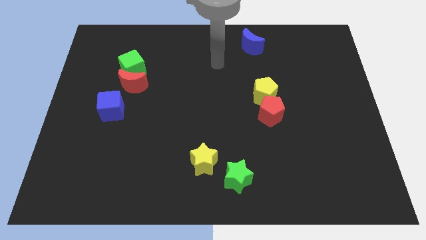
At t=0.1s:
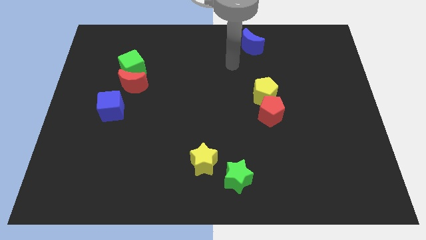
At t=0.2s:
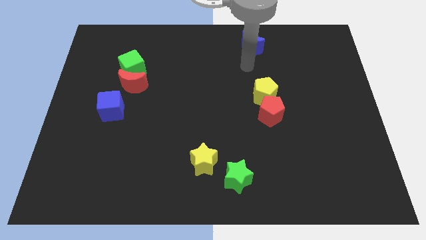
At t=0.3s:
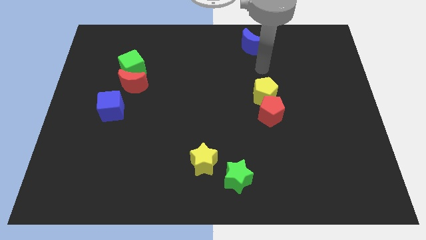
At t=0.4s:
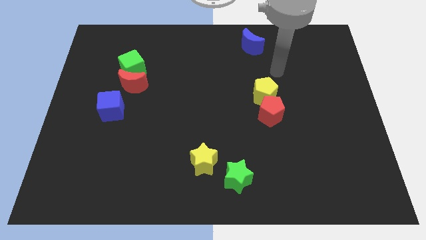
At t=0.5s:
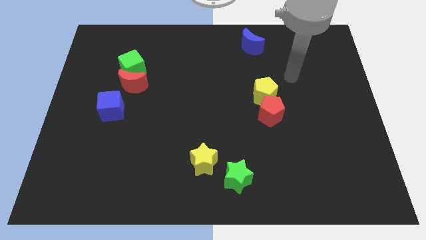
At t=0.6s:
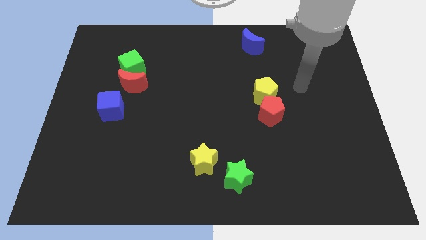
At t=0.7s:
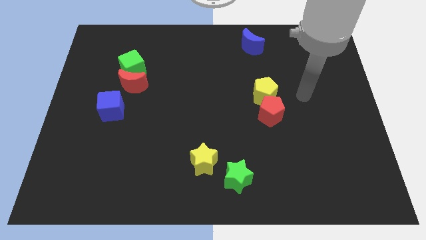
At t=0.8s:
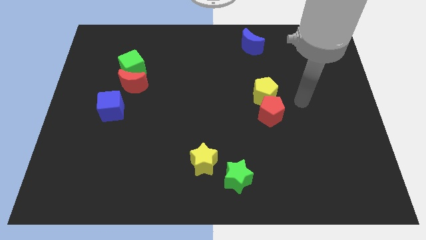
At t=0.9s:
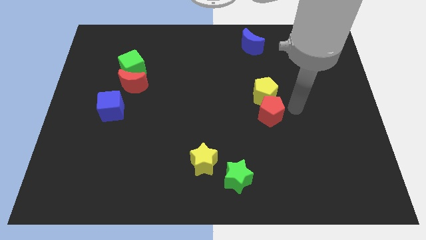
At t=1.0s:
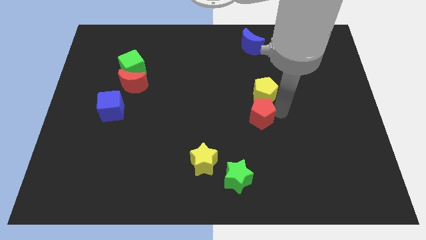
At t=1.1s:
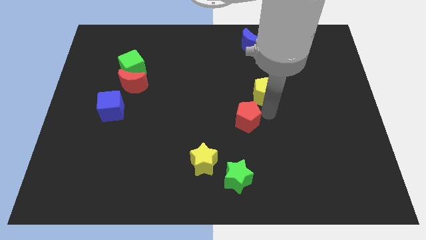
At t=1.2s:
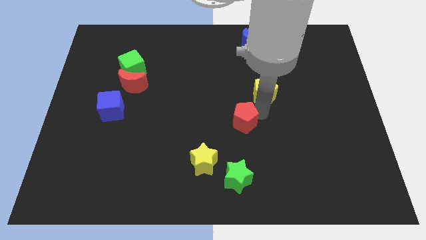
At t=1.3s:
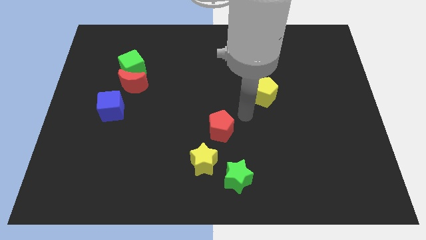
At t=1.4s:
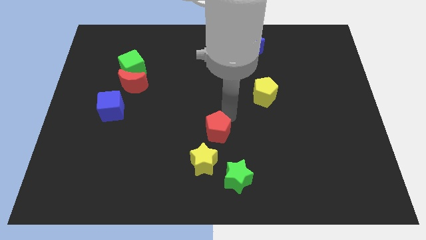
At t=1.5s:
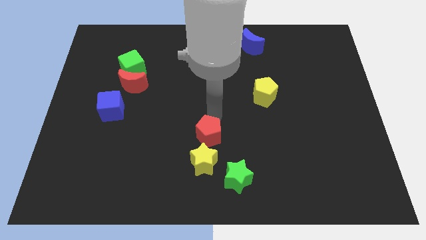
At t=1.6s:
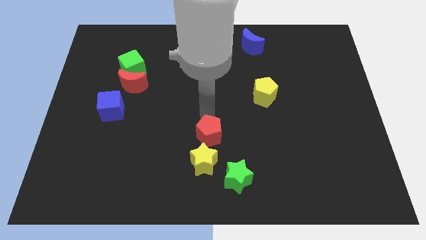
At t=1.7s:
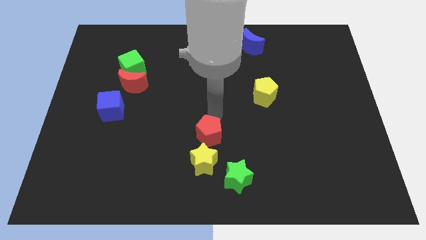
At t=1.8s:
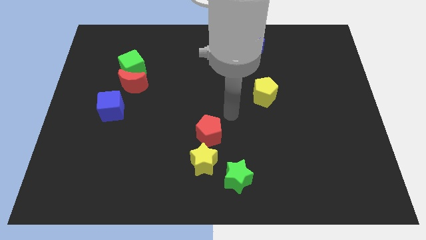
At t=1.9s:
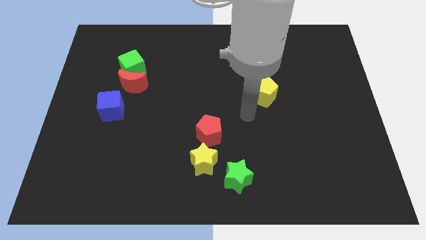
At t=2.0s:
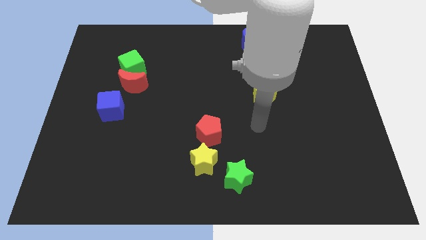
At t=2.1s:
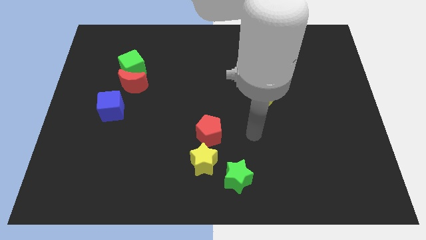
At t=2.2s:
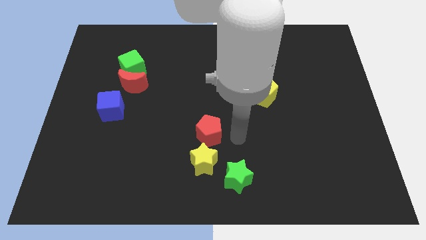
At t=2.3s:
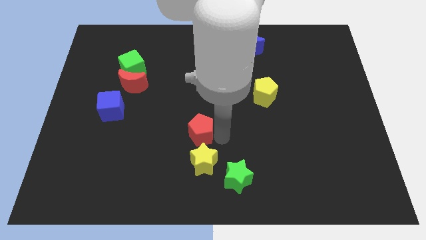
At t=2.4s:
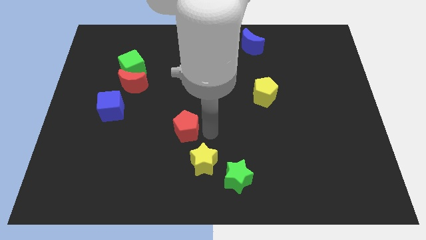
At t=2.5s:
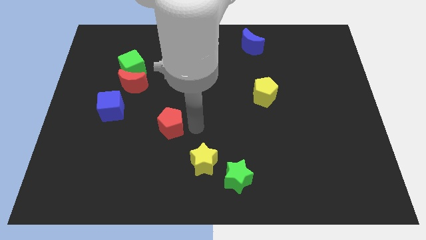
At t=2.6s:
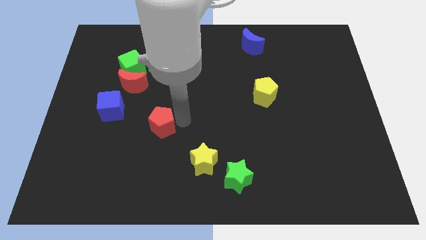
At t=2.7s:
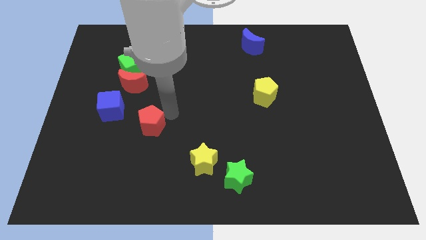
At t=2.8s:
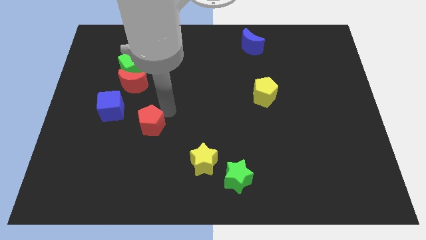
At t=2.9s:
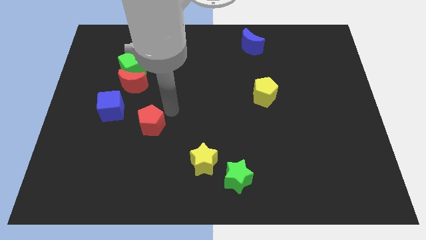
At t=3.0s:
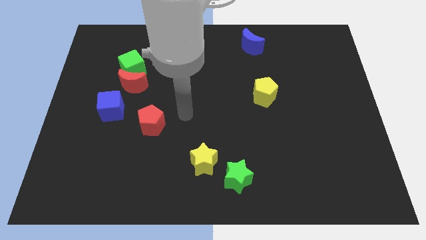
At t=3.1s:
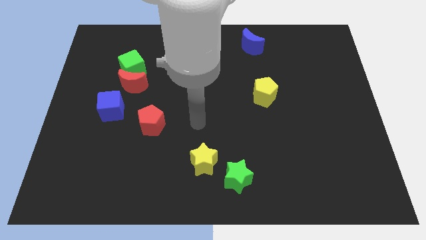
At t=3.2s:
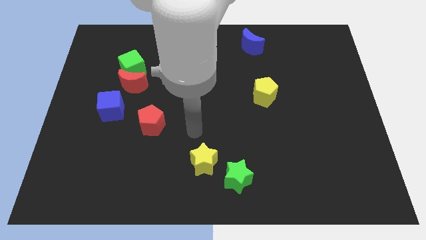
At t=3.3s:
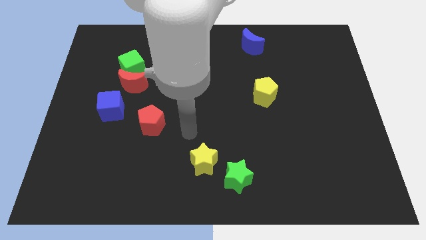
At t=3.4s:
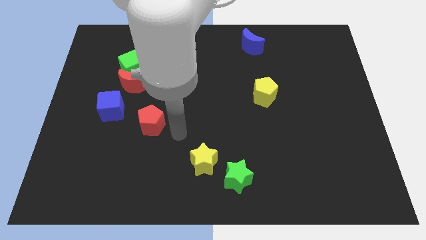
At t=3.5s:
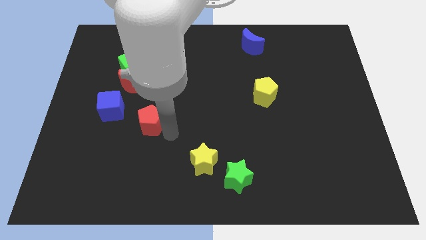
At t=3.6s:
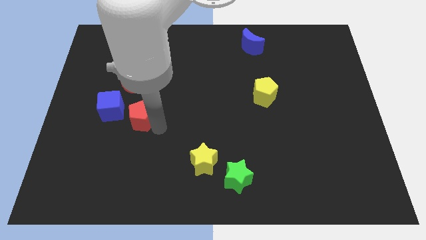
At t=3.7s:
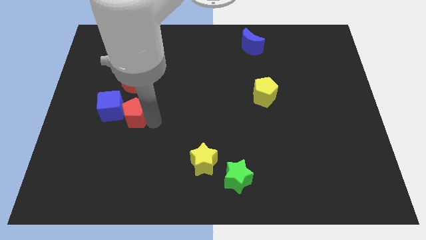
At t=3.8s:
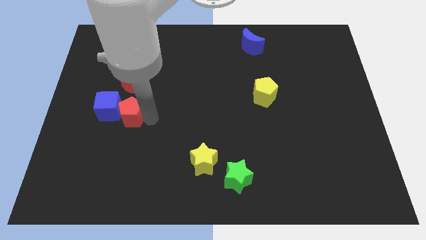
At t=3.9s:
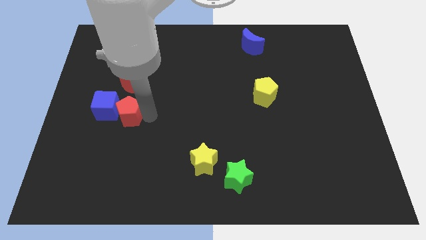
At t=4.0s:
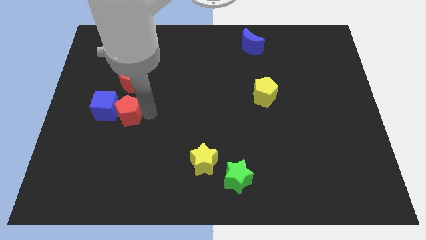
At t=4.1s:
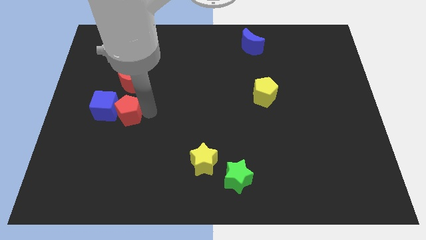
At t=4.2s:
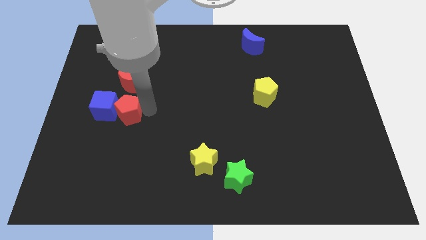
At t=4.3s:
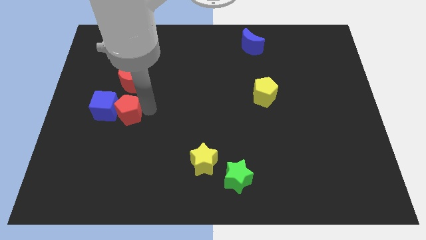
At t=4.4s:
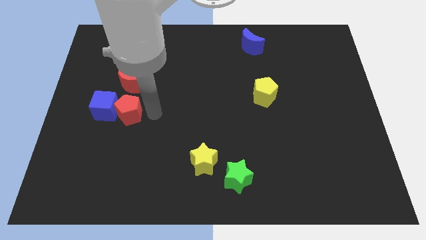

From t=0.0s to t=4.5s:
place the red pentagon below the red moon

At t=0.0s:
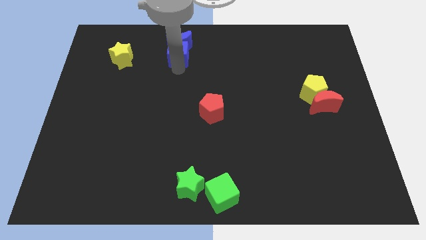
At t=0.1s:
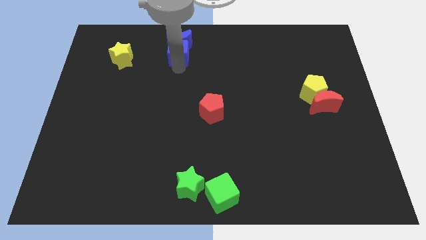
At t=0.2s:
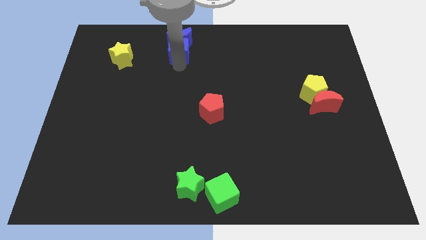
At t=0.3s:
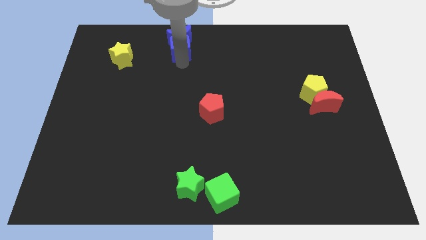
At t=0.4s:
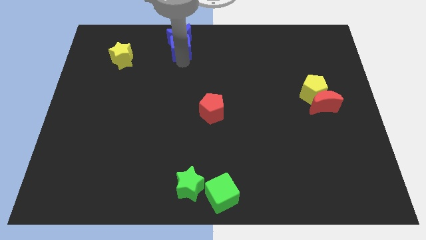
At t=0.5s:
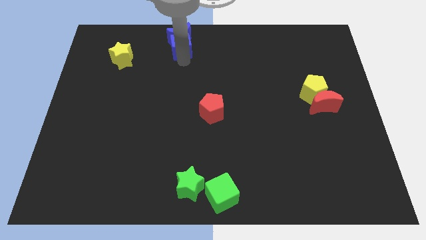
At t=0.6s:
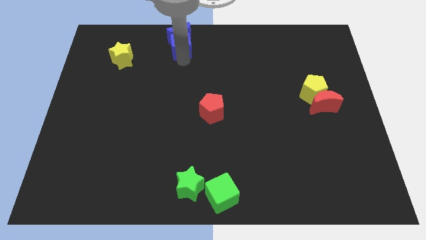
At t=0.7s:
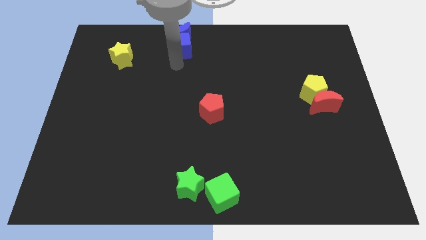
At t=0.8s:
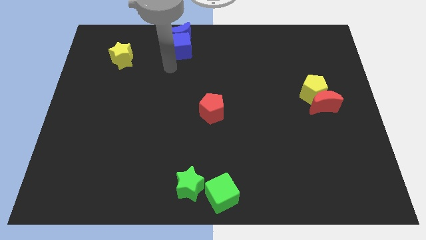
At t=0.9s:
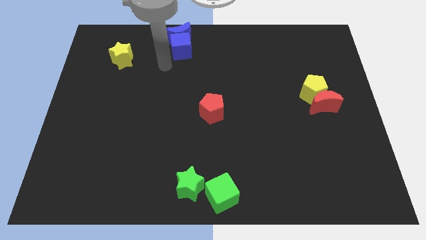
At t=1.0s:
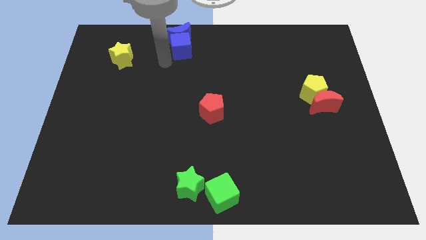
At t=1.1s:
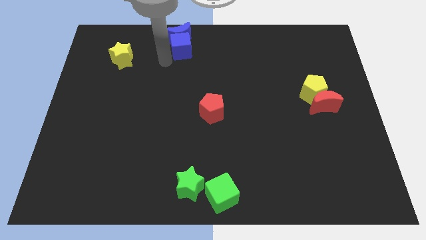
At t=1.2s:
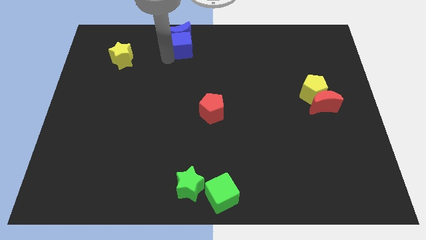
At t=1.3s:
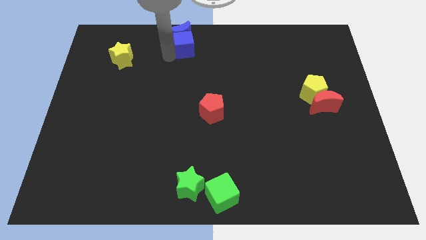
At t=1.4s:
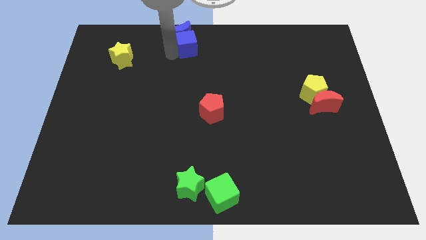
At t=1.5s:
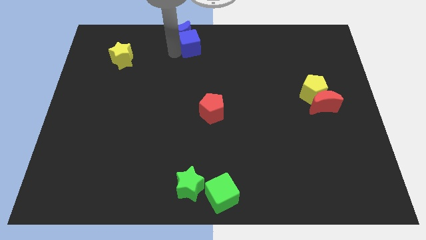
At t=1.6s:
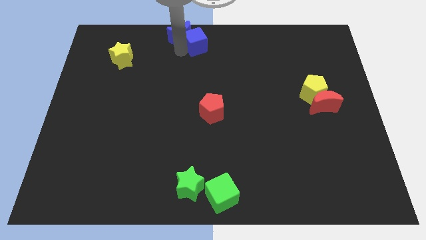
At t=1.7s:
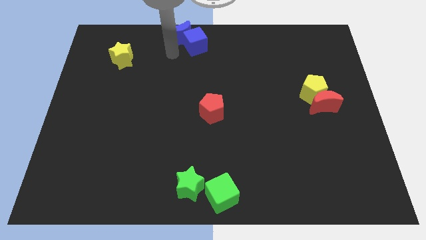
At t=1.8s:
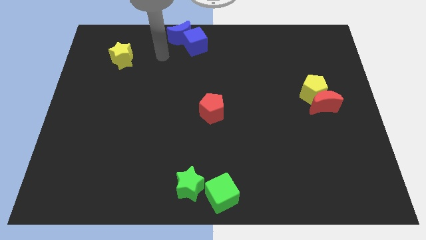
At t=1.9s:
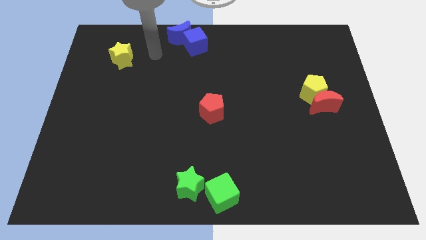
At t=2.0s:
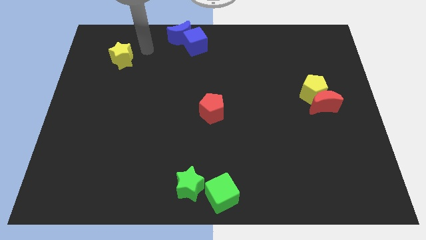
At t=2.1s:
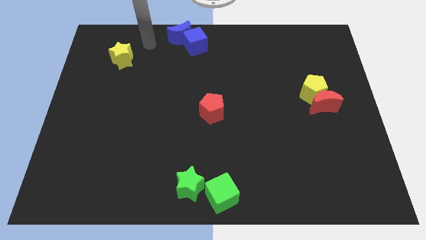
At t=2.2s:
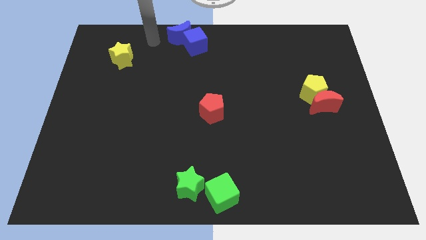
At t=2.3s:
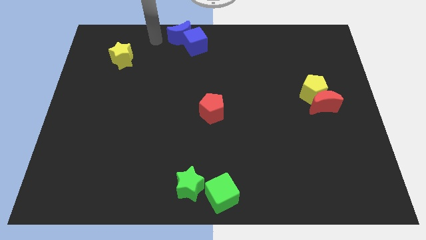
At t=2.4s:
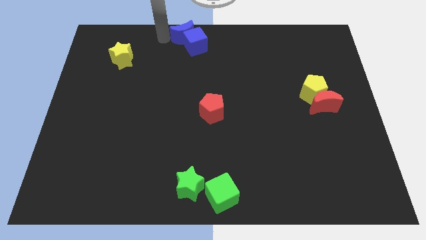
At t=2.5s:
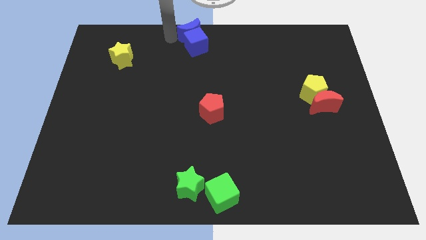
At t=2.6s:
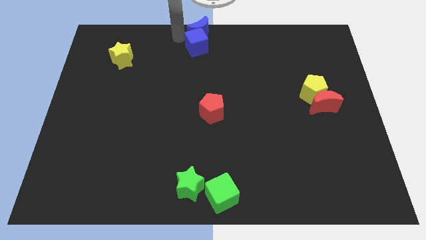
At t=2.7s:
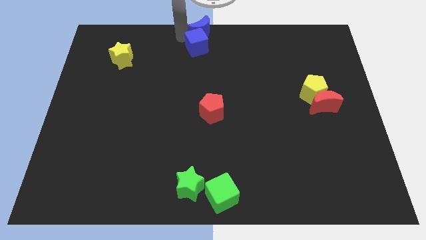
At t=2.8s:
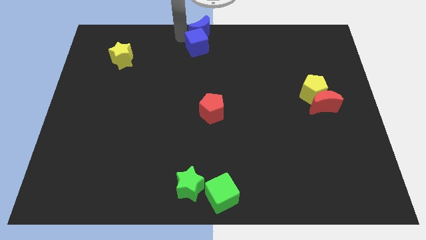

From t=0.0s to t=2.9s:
place the group of blue blocks above the red pentagon

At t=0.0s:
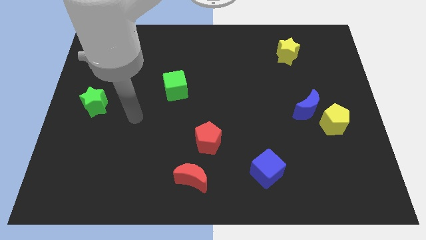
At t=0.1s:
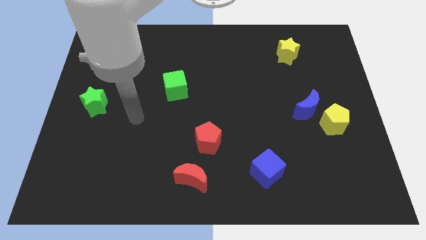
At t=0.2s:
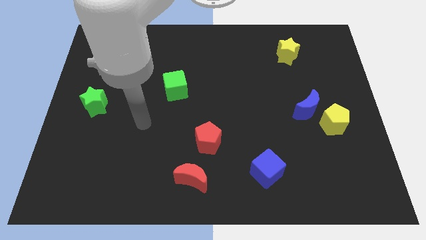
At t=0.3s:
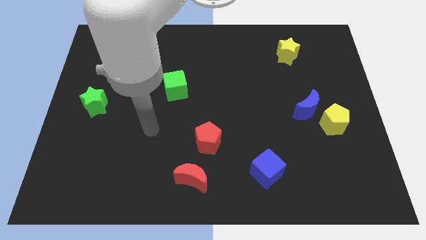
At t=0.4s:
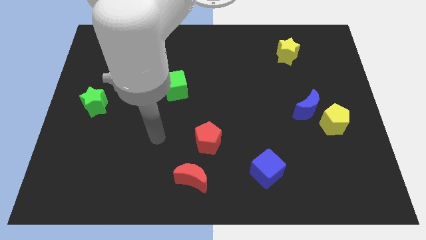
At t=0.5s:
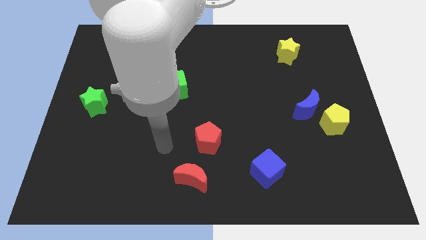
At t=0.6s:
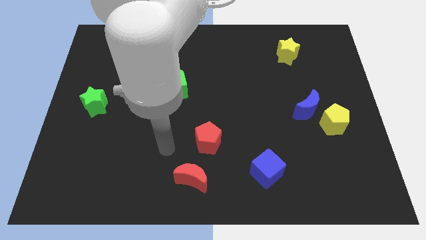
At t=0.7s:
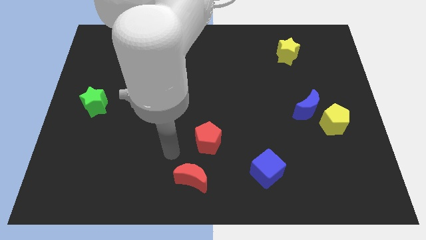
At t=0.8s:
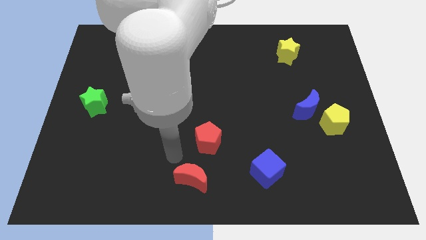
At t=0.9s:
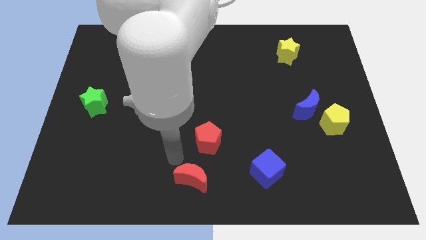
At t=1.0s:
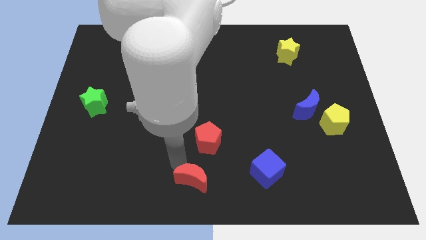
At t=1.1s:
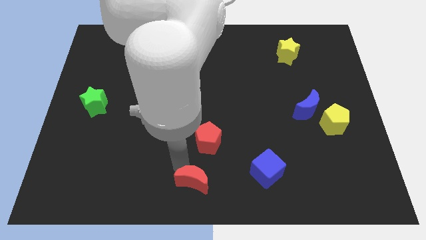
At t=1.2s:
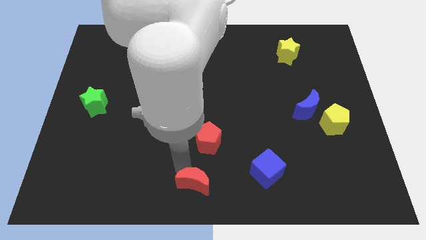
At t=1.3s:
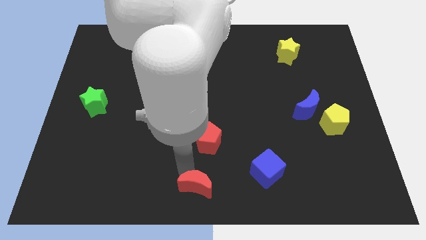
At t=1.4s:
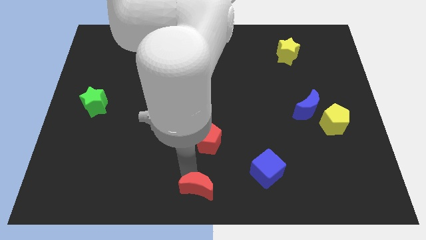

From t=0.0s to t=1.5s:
slightly push the the red crescent down
